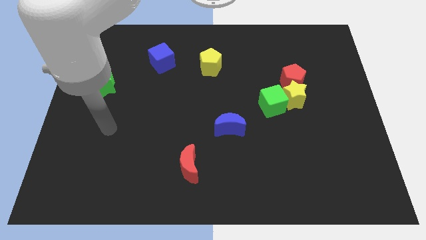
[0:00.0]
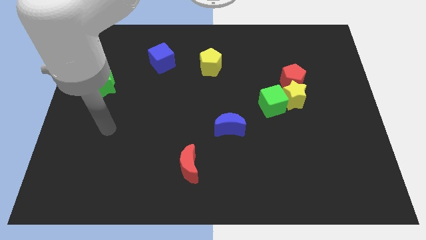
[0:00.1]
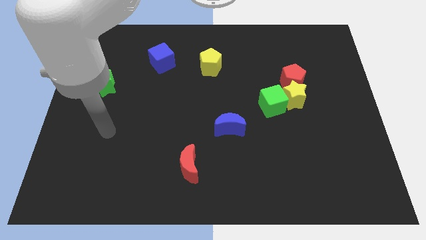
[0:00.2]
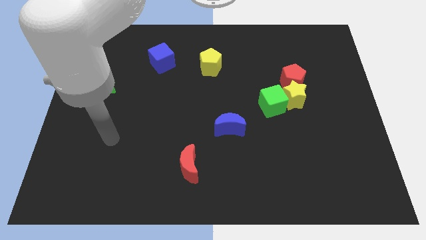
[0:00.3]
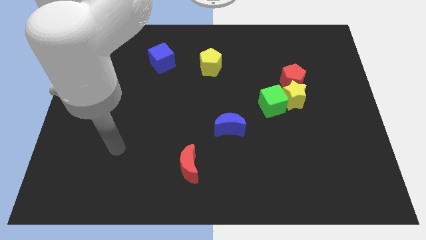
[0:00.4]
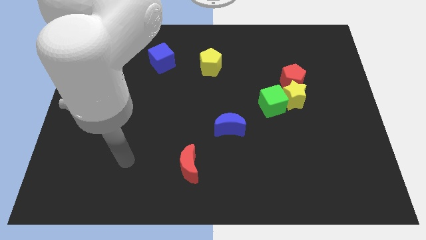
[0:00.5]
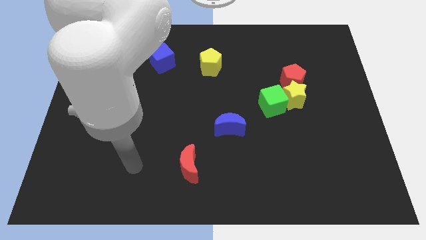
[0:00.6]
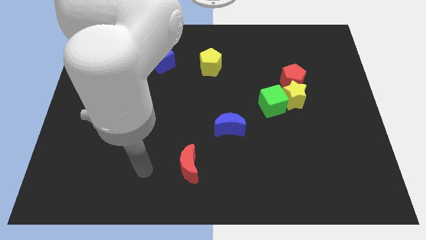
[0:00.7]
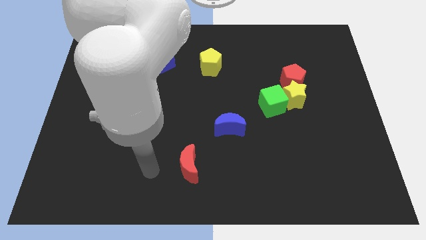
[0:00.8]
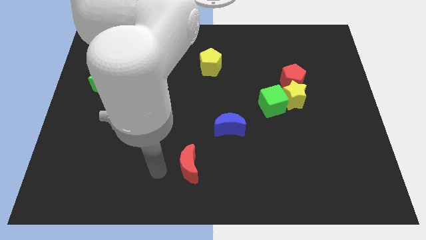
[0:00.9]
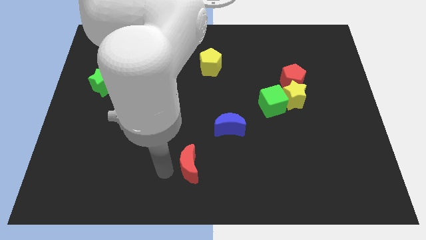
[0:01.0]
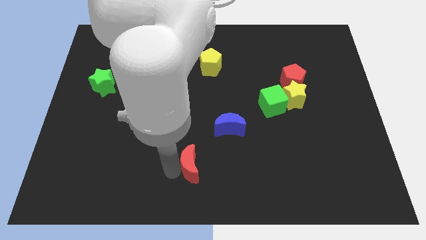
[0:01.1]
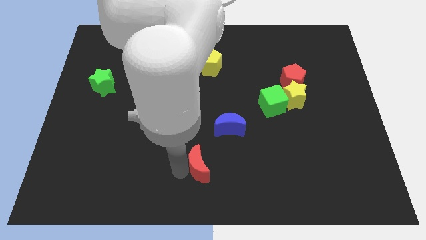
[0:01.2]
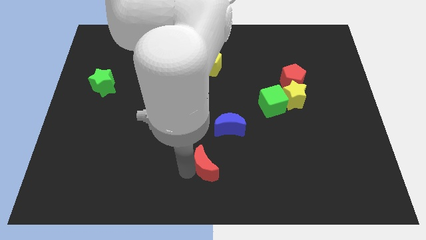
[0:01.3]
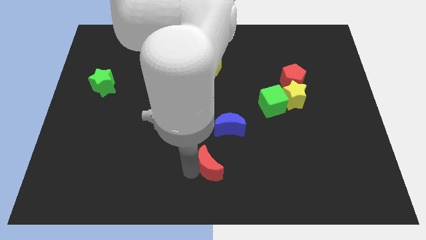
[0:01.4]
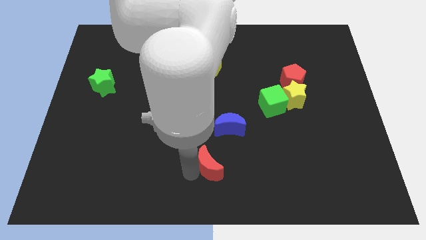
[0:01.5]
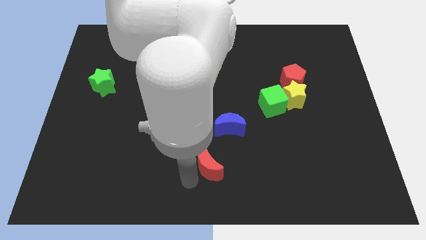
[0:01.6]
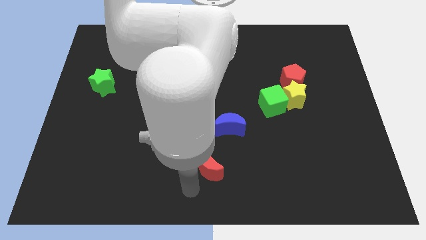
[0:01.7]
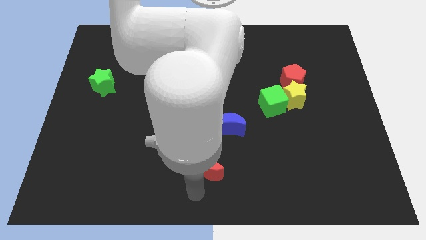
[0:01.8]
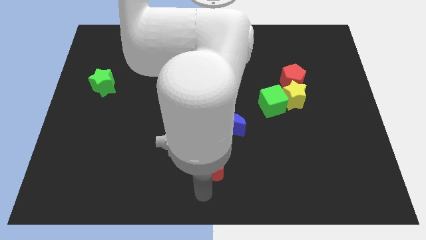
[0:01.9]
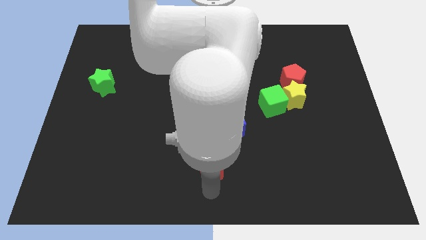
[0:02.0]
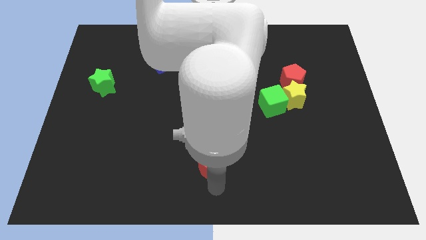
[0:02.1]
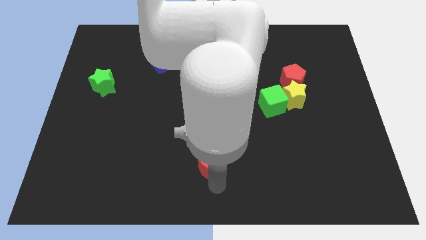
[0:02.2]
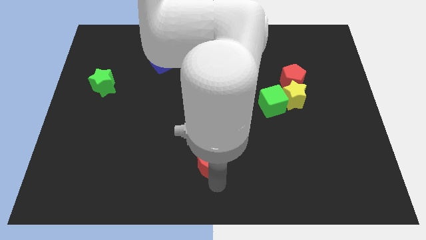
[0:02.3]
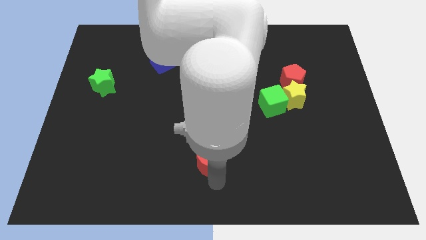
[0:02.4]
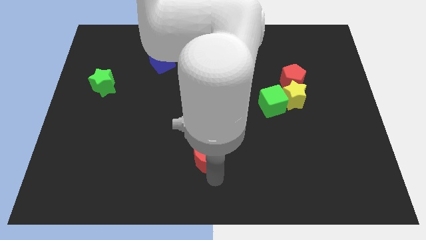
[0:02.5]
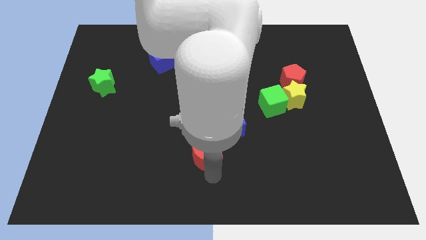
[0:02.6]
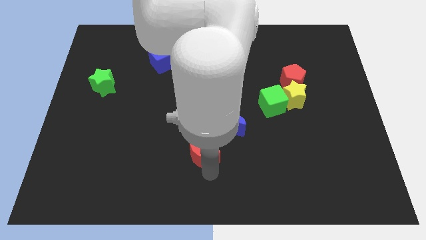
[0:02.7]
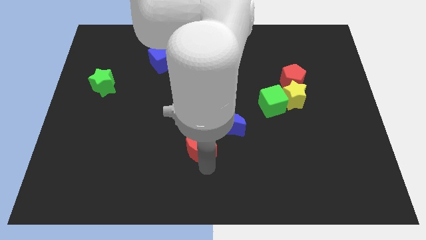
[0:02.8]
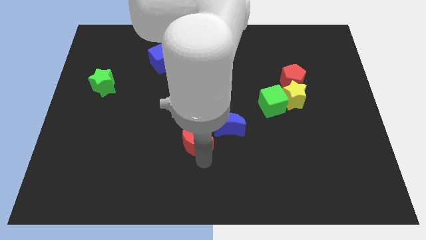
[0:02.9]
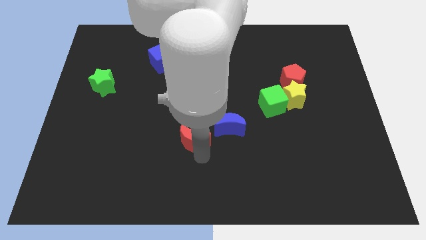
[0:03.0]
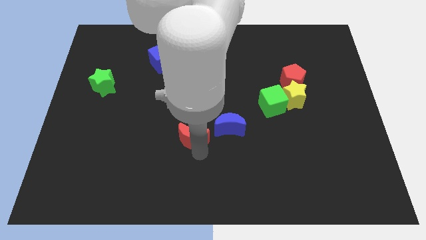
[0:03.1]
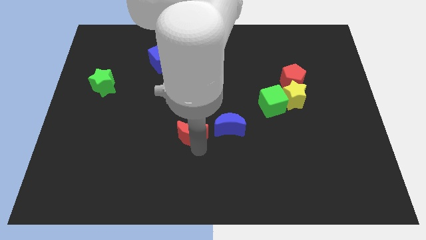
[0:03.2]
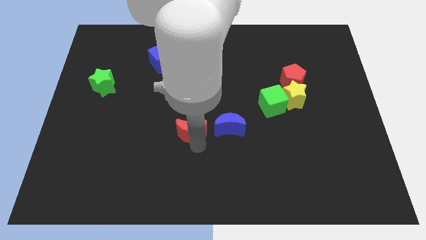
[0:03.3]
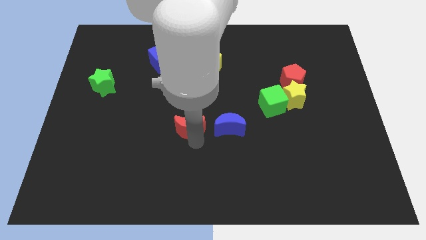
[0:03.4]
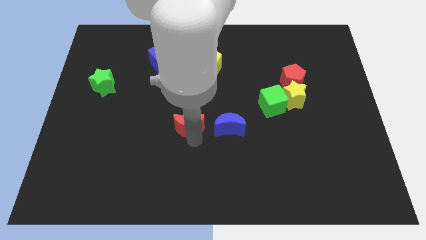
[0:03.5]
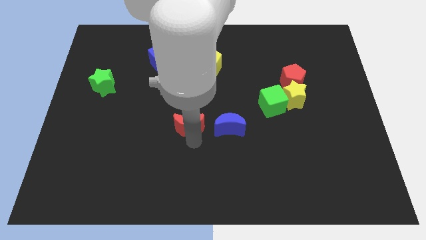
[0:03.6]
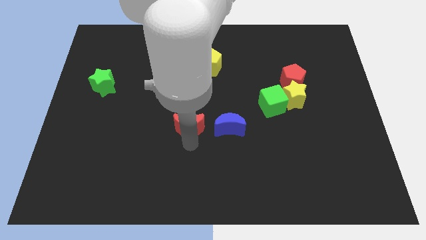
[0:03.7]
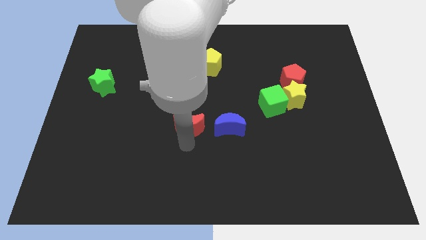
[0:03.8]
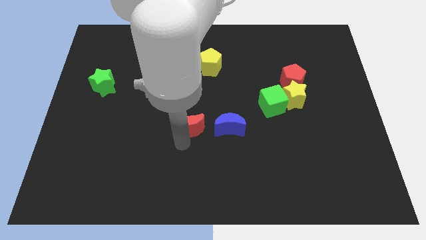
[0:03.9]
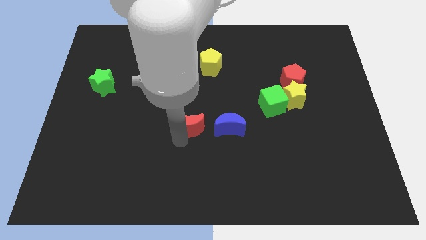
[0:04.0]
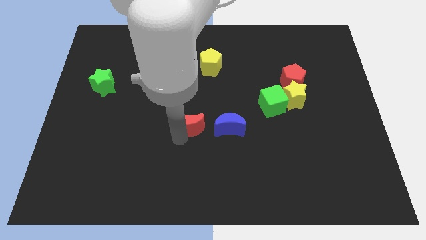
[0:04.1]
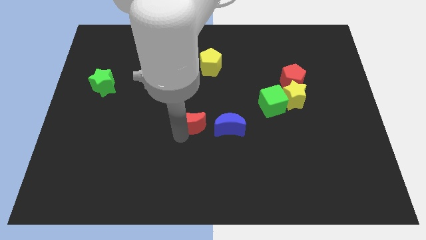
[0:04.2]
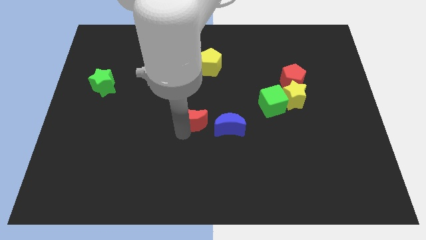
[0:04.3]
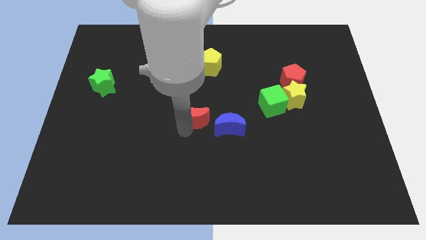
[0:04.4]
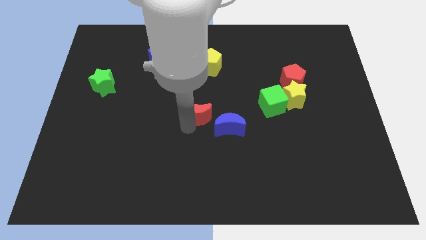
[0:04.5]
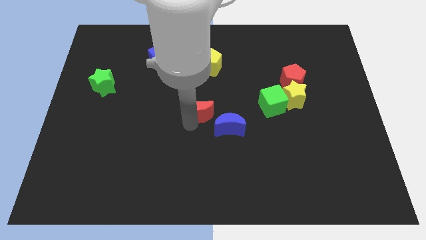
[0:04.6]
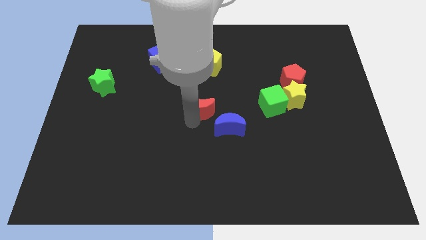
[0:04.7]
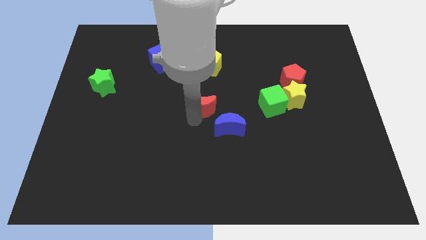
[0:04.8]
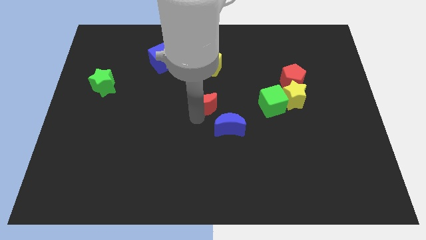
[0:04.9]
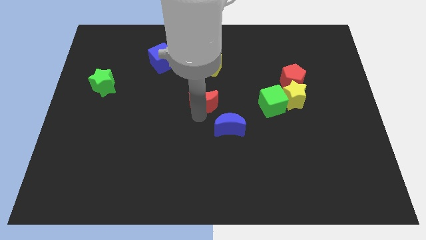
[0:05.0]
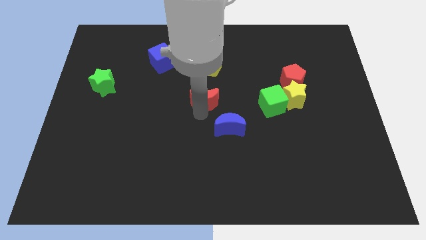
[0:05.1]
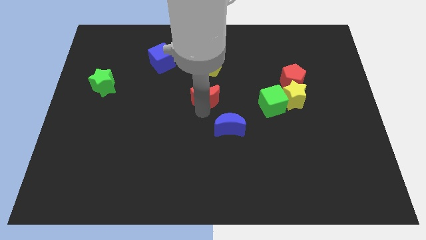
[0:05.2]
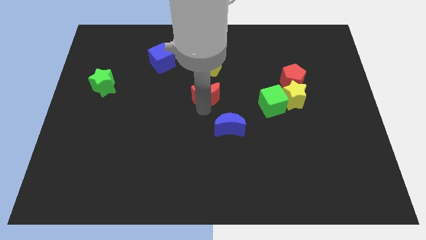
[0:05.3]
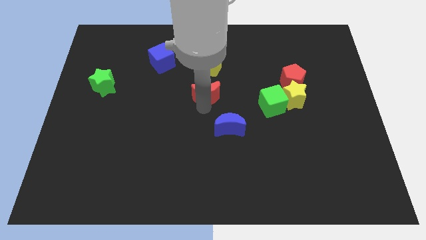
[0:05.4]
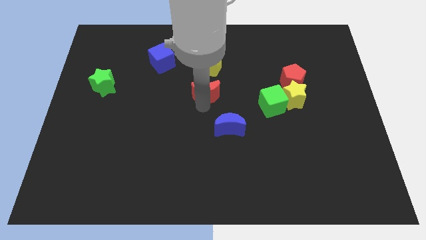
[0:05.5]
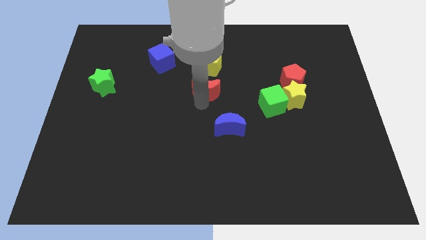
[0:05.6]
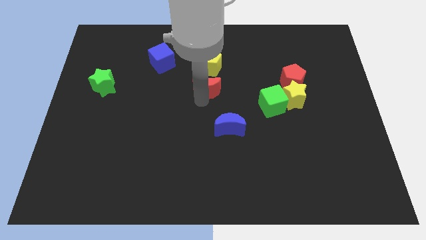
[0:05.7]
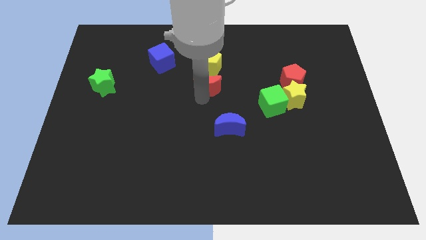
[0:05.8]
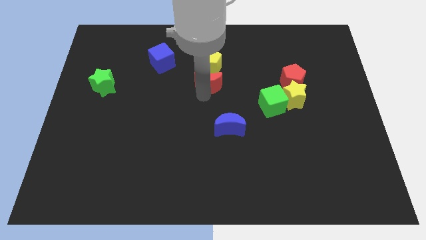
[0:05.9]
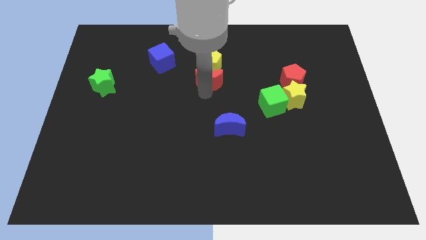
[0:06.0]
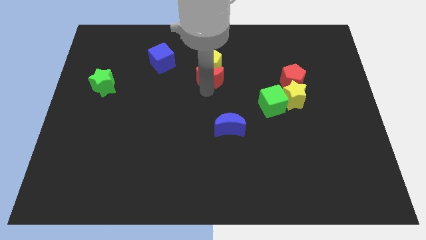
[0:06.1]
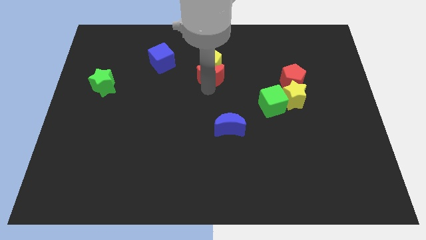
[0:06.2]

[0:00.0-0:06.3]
push the red moon towards the yellow pentagon

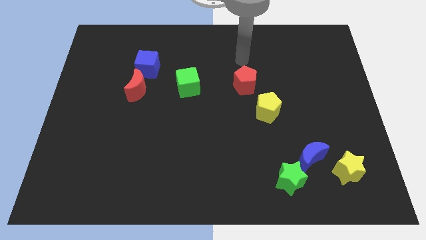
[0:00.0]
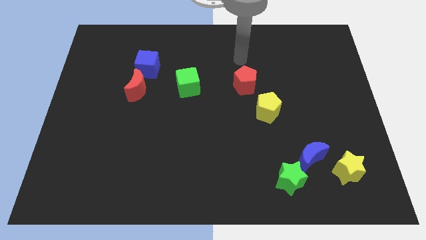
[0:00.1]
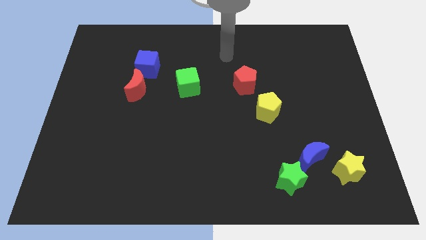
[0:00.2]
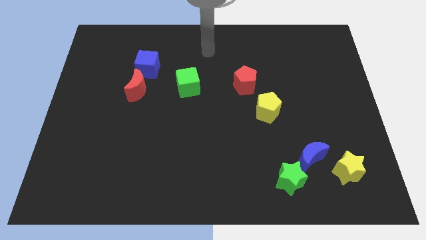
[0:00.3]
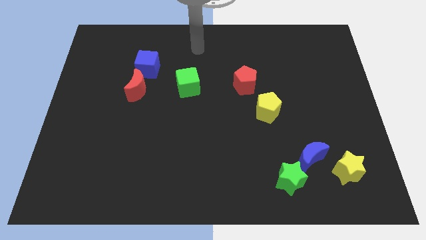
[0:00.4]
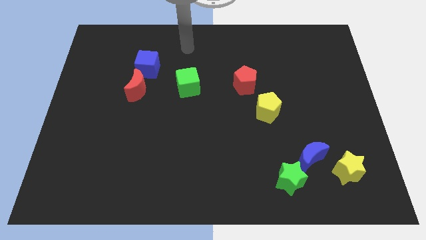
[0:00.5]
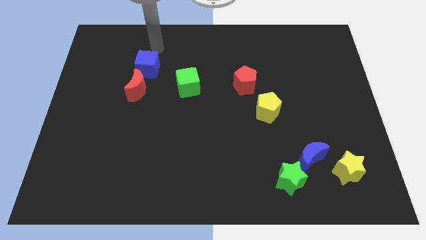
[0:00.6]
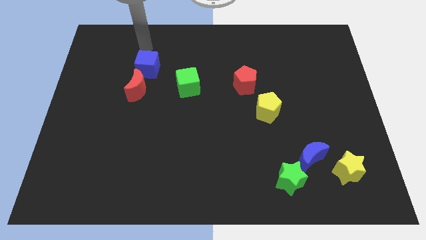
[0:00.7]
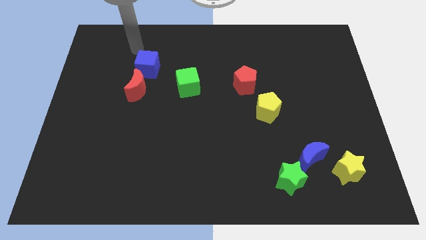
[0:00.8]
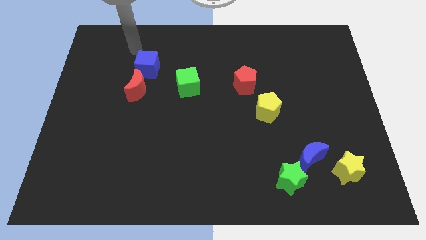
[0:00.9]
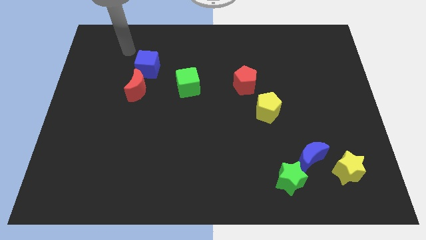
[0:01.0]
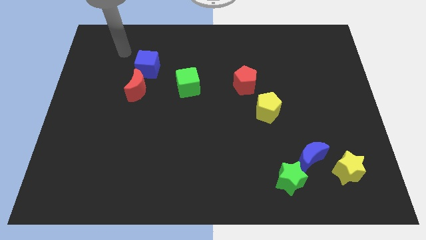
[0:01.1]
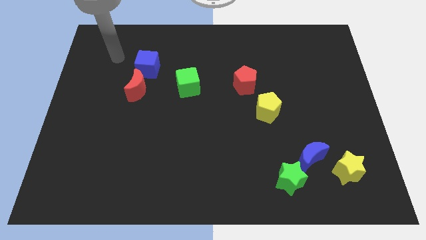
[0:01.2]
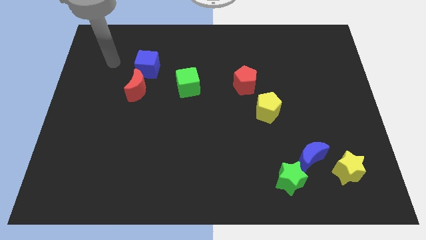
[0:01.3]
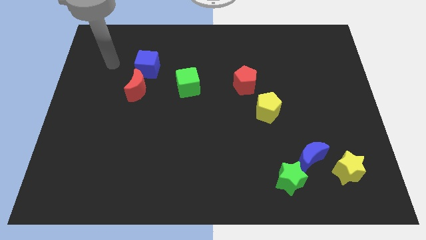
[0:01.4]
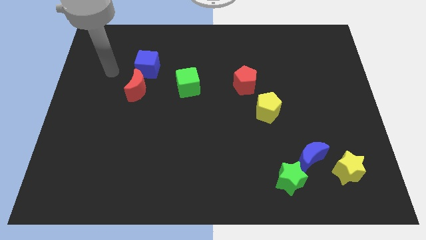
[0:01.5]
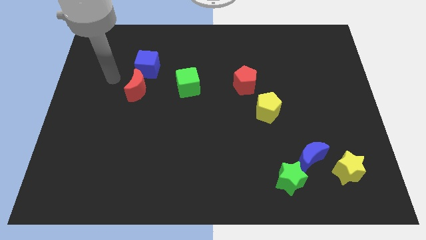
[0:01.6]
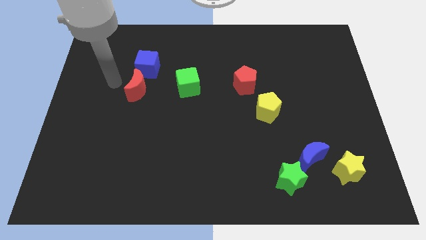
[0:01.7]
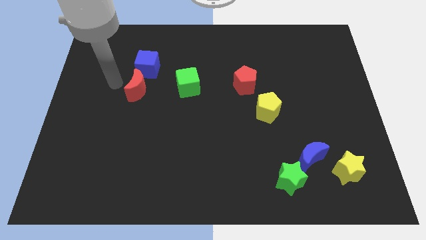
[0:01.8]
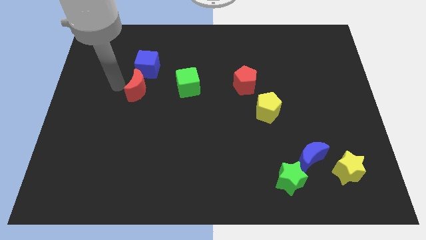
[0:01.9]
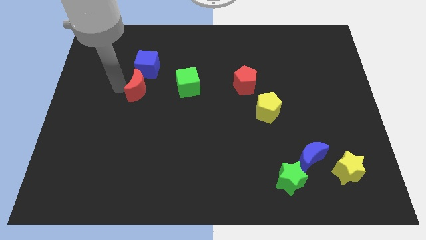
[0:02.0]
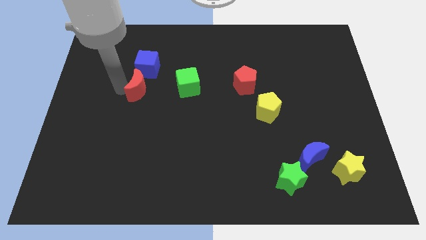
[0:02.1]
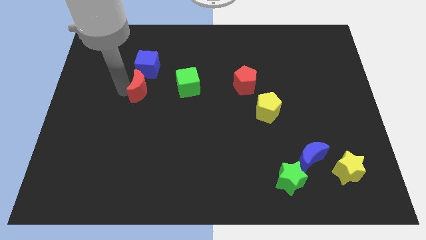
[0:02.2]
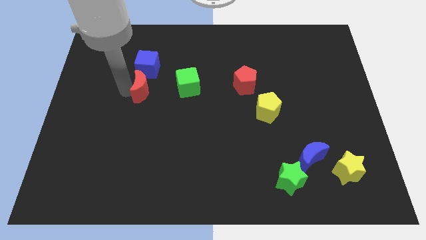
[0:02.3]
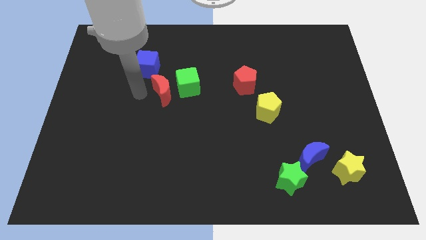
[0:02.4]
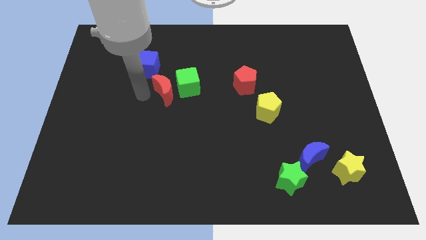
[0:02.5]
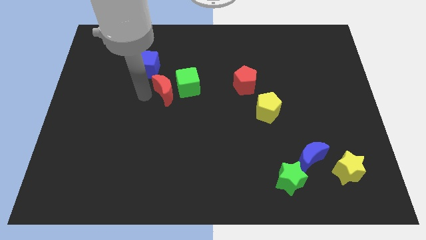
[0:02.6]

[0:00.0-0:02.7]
move the red moon to the green cube
